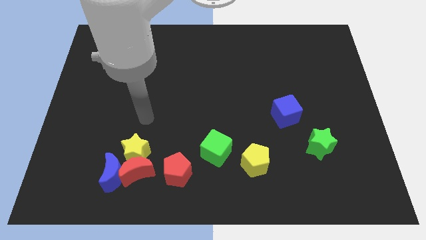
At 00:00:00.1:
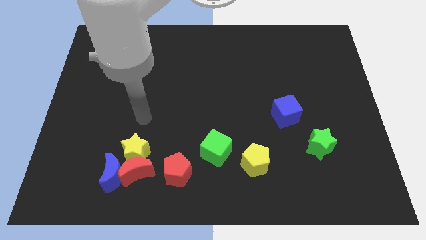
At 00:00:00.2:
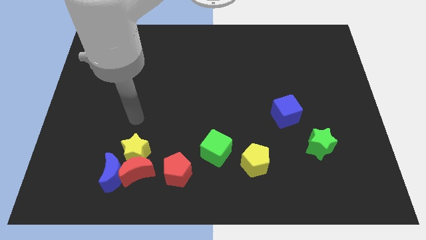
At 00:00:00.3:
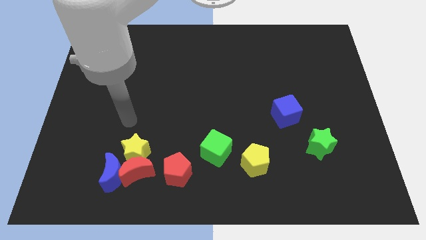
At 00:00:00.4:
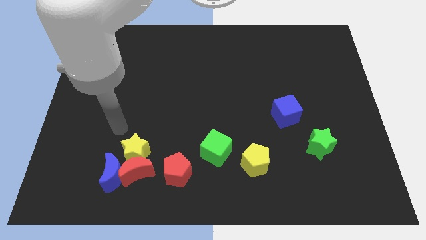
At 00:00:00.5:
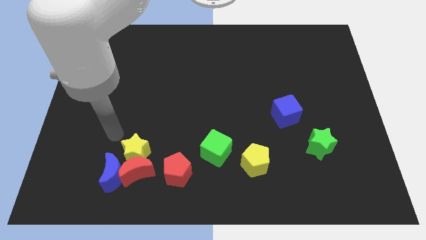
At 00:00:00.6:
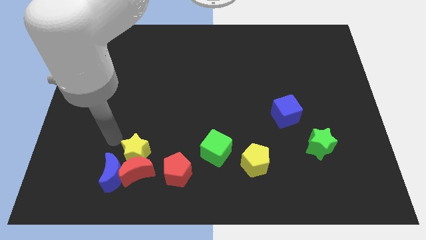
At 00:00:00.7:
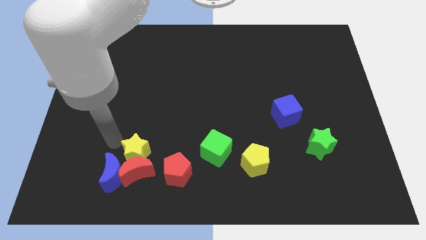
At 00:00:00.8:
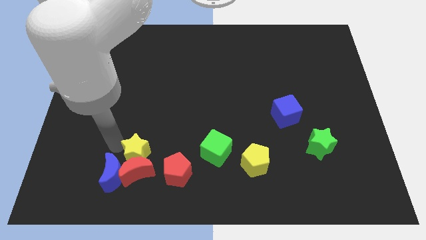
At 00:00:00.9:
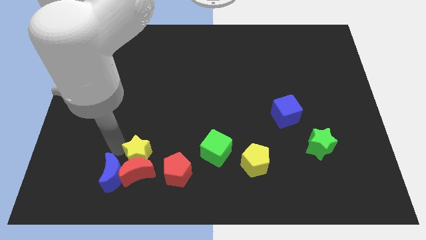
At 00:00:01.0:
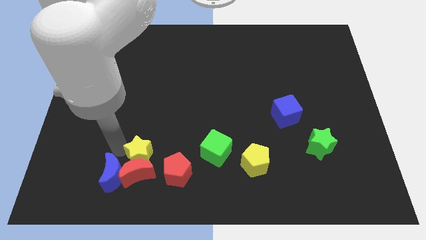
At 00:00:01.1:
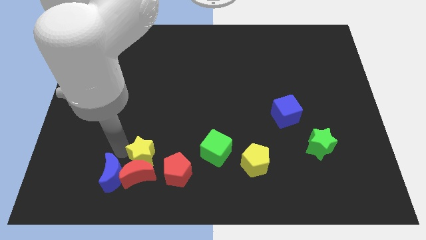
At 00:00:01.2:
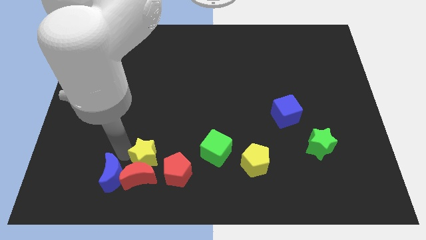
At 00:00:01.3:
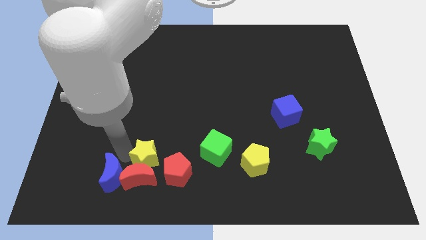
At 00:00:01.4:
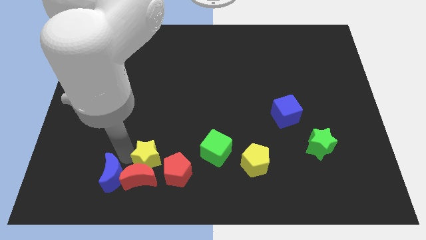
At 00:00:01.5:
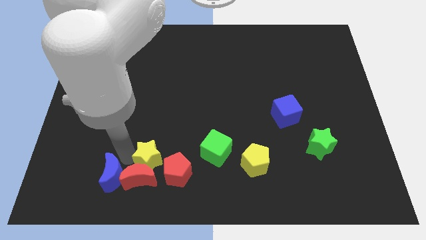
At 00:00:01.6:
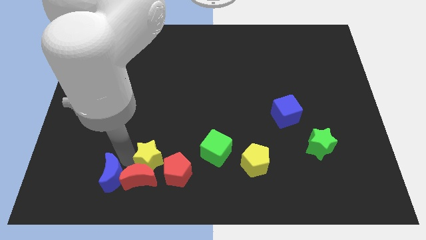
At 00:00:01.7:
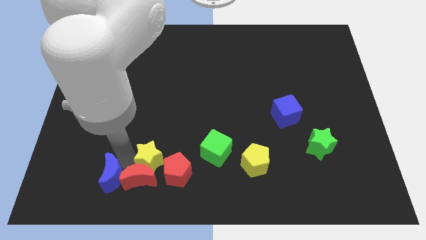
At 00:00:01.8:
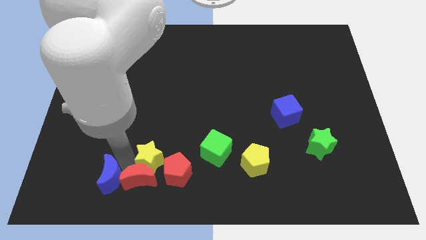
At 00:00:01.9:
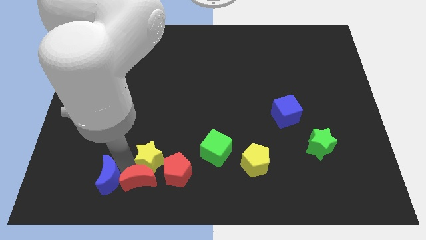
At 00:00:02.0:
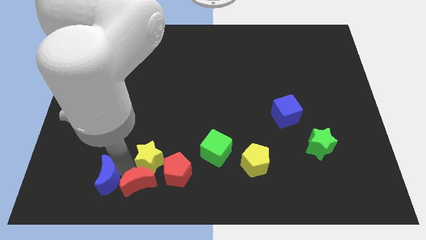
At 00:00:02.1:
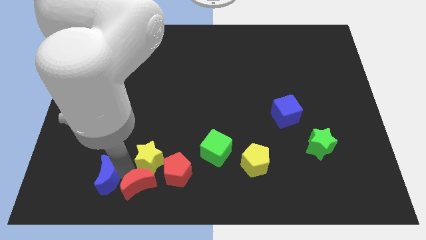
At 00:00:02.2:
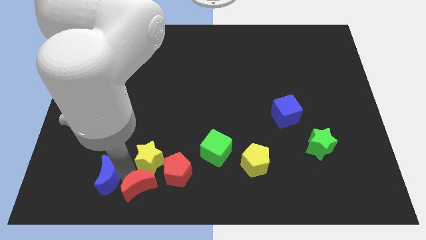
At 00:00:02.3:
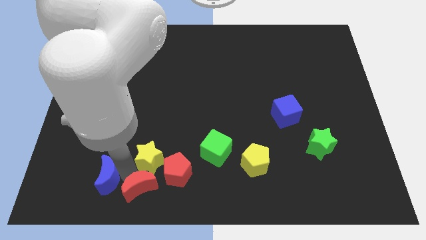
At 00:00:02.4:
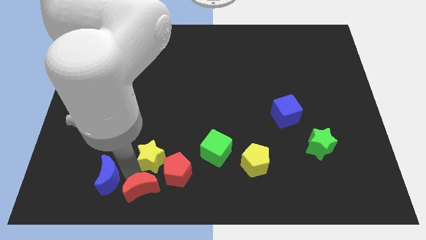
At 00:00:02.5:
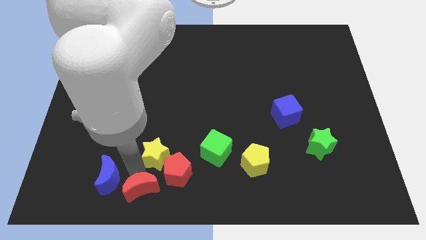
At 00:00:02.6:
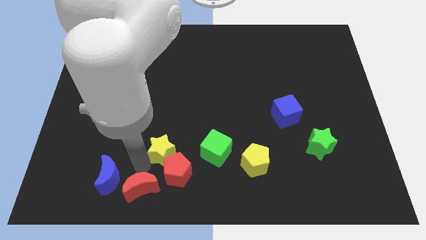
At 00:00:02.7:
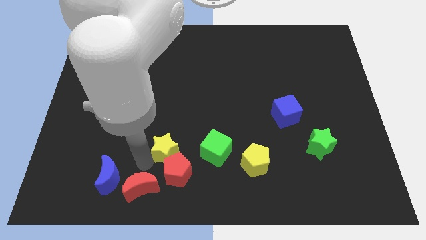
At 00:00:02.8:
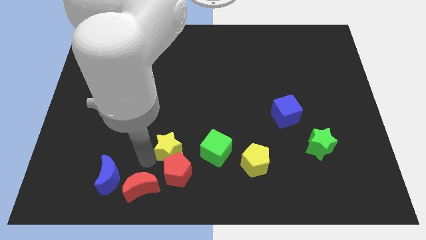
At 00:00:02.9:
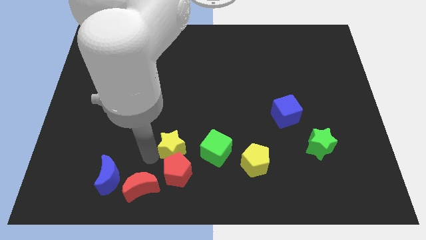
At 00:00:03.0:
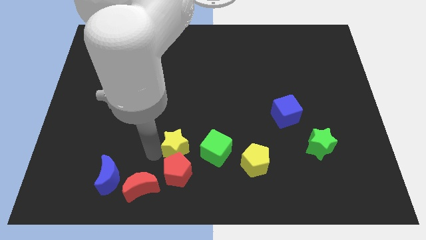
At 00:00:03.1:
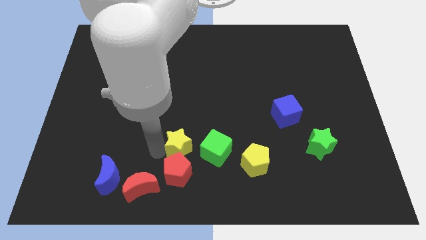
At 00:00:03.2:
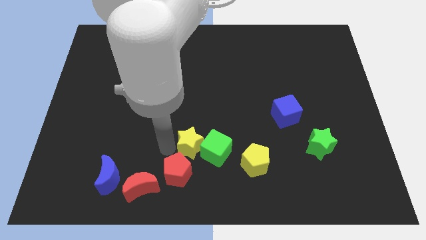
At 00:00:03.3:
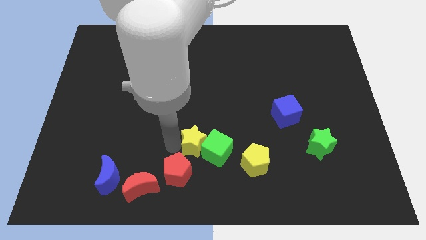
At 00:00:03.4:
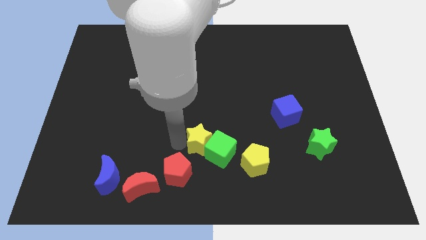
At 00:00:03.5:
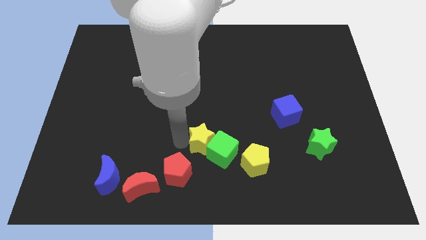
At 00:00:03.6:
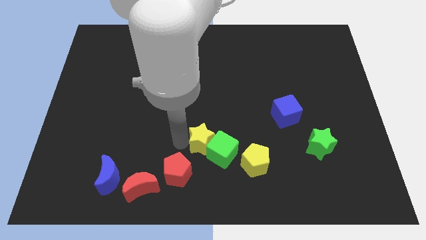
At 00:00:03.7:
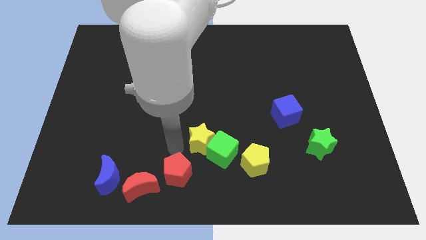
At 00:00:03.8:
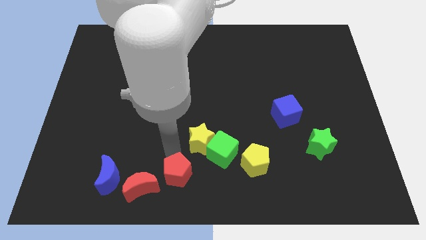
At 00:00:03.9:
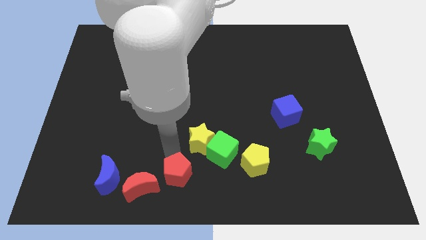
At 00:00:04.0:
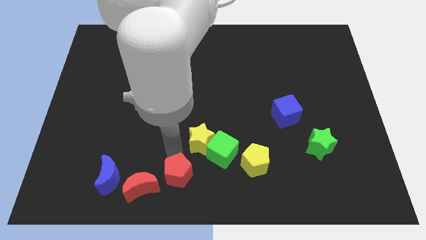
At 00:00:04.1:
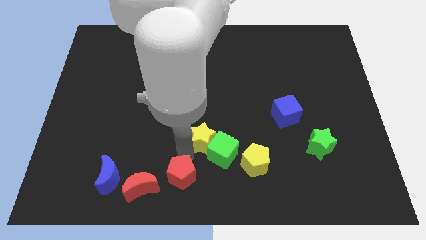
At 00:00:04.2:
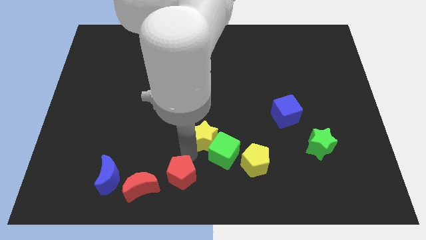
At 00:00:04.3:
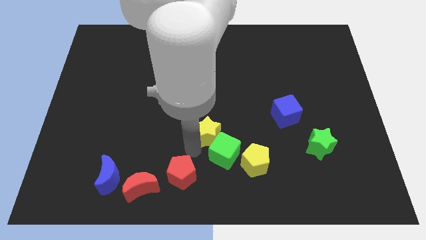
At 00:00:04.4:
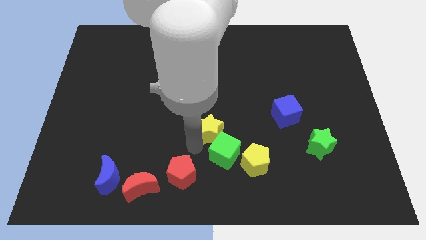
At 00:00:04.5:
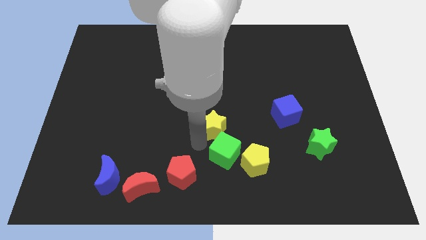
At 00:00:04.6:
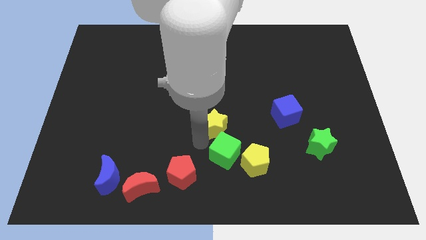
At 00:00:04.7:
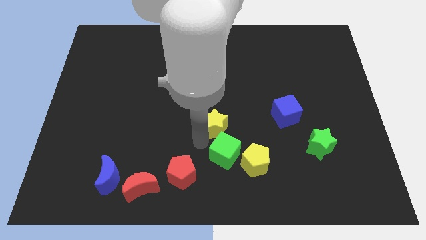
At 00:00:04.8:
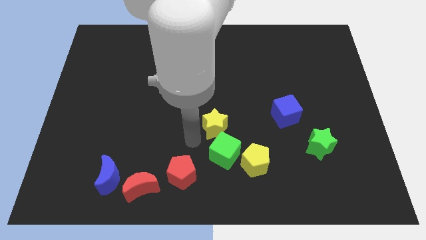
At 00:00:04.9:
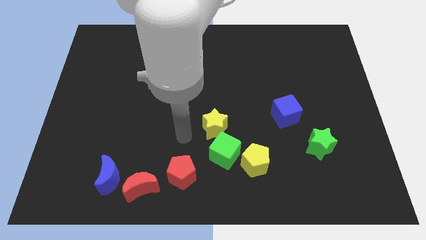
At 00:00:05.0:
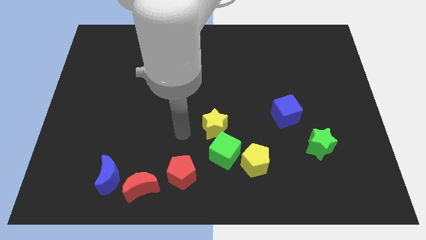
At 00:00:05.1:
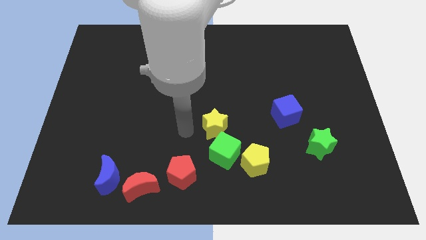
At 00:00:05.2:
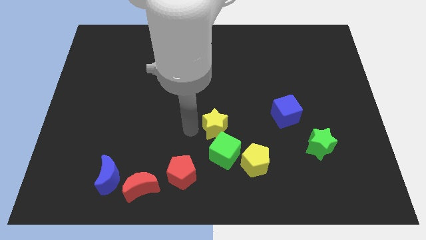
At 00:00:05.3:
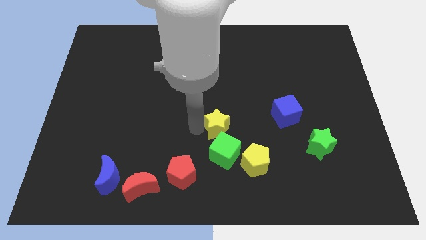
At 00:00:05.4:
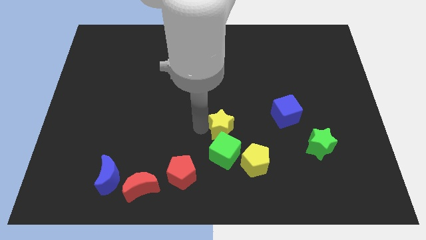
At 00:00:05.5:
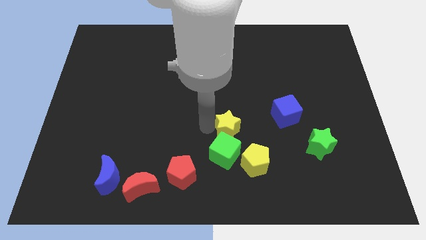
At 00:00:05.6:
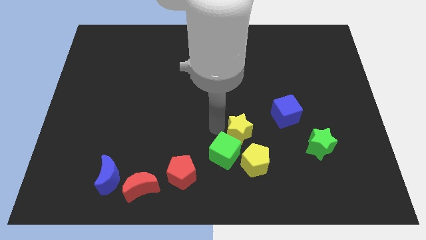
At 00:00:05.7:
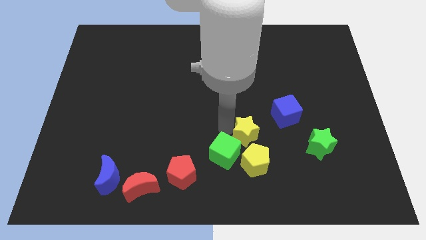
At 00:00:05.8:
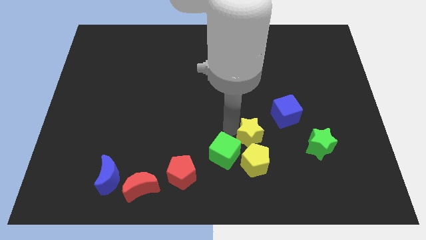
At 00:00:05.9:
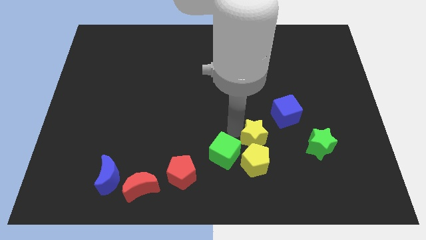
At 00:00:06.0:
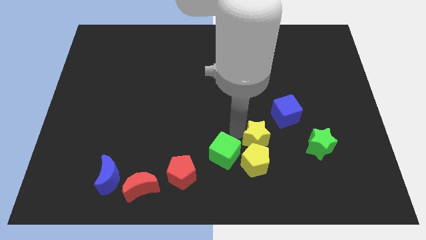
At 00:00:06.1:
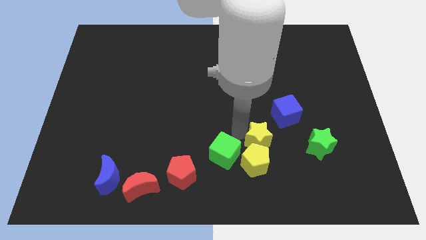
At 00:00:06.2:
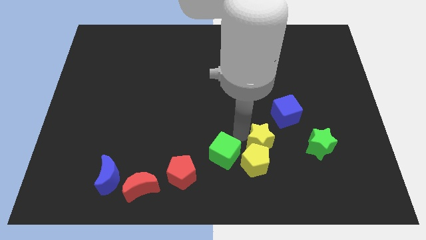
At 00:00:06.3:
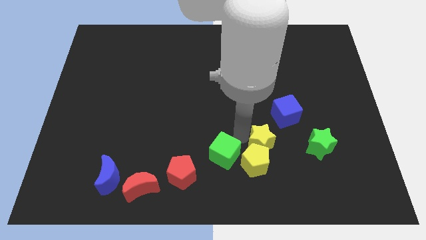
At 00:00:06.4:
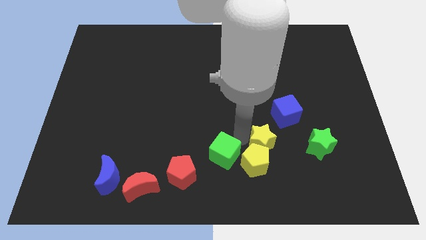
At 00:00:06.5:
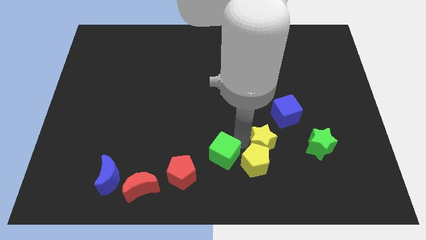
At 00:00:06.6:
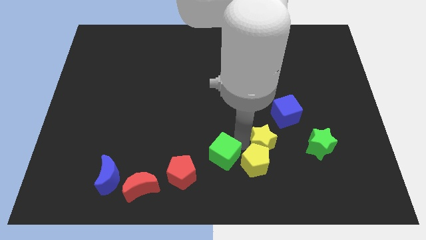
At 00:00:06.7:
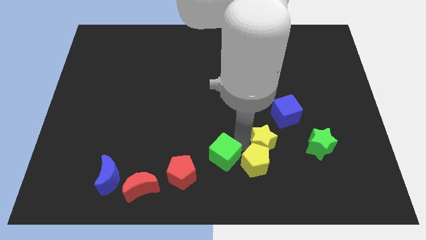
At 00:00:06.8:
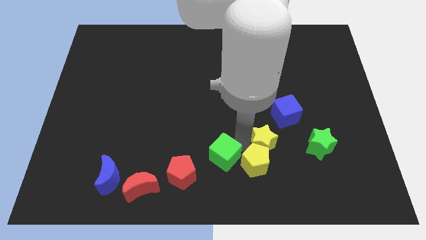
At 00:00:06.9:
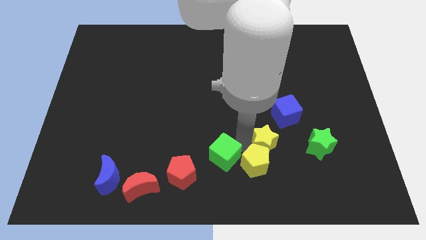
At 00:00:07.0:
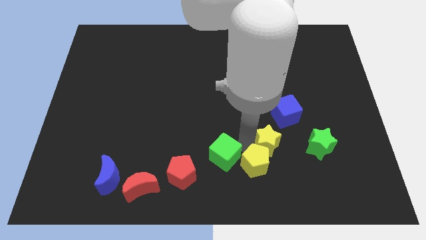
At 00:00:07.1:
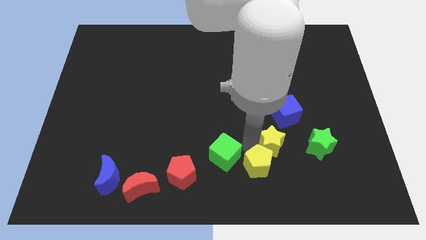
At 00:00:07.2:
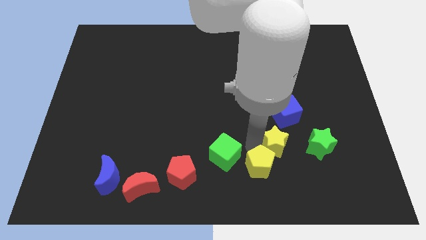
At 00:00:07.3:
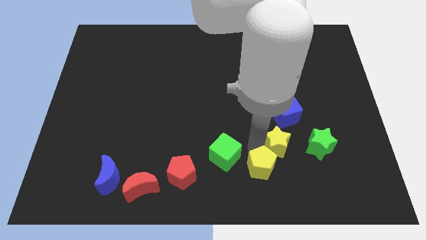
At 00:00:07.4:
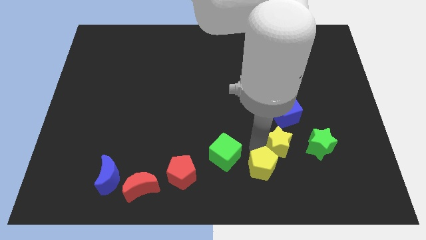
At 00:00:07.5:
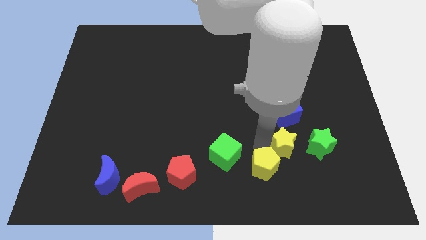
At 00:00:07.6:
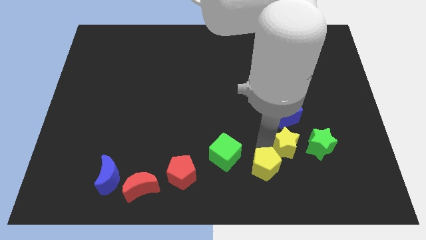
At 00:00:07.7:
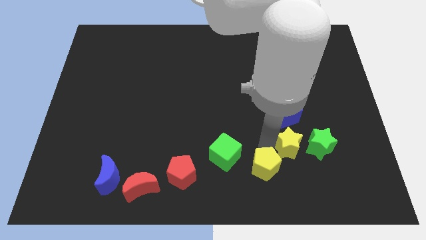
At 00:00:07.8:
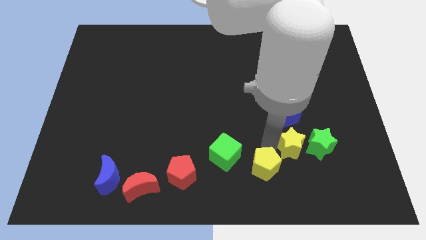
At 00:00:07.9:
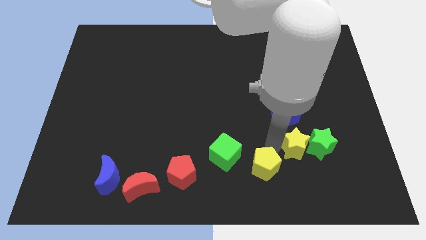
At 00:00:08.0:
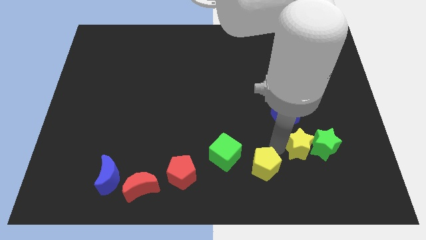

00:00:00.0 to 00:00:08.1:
push the yellow star to the green star
